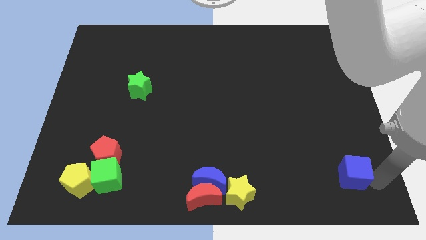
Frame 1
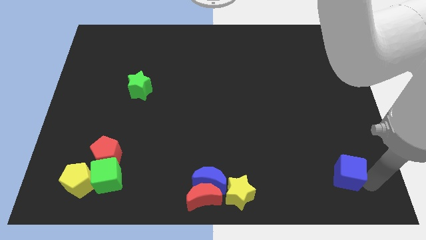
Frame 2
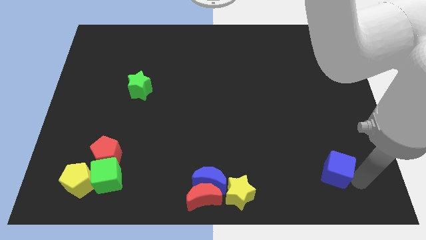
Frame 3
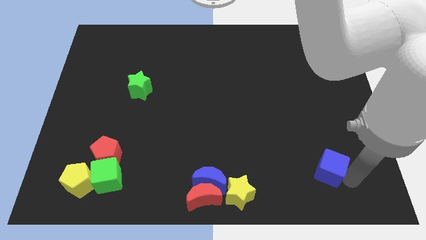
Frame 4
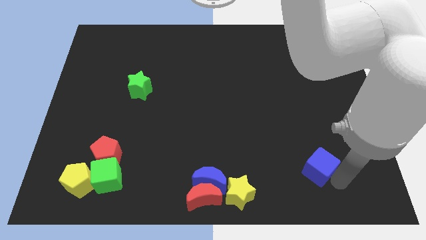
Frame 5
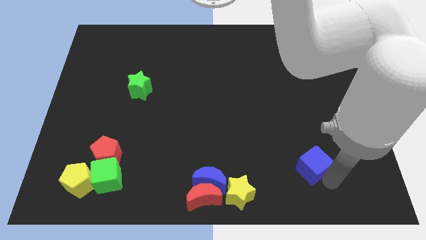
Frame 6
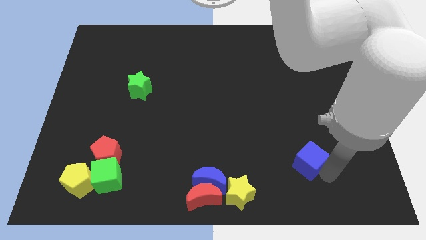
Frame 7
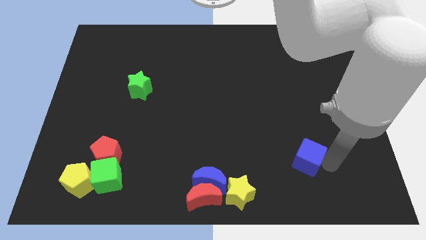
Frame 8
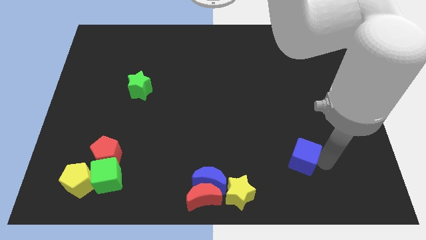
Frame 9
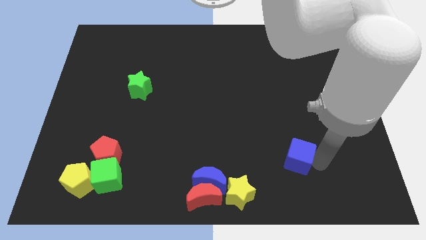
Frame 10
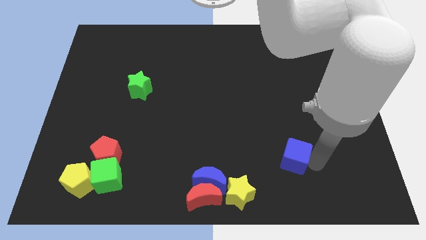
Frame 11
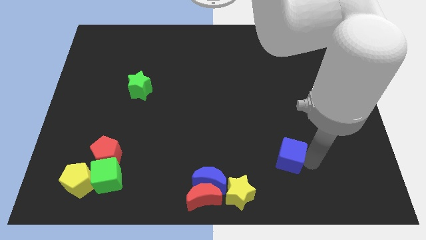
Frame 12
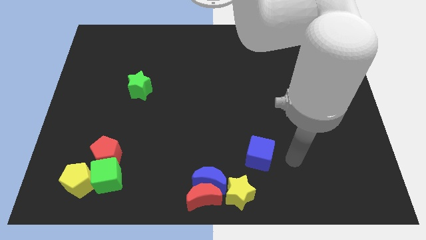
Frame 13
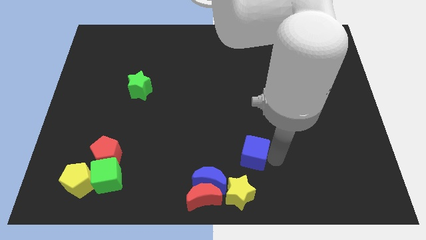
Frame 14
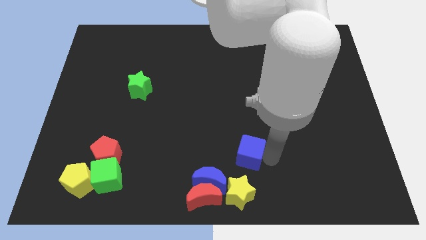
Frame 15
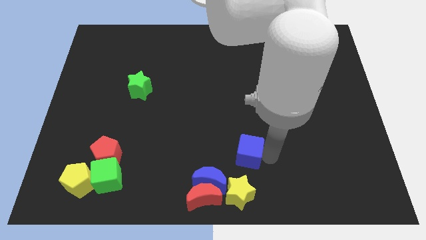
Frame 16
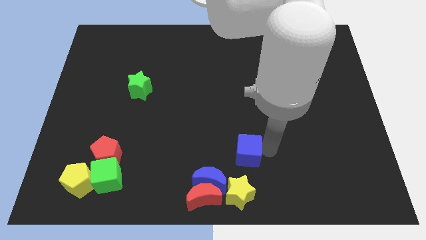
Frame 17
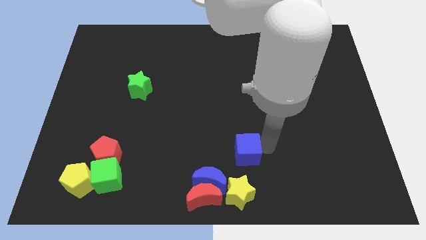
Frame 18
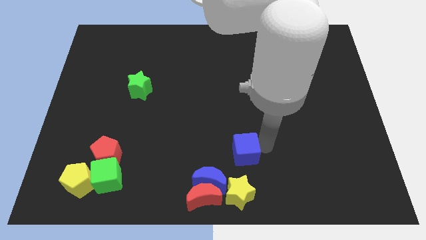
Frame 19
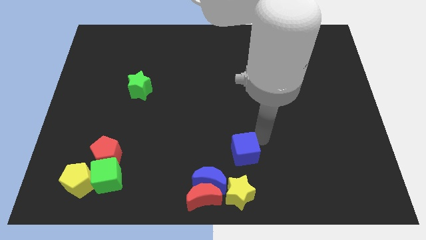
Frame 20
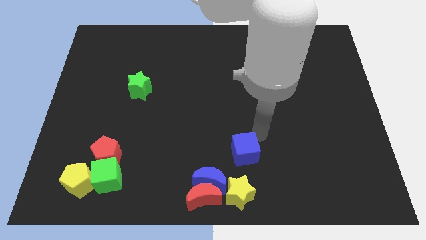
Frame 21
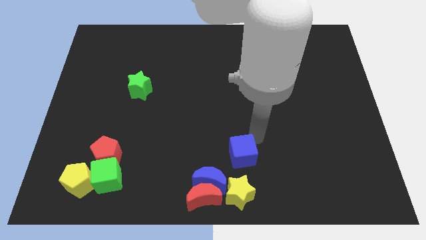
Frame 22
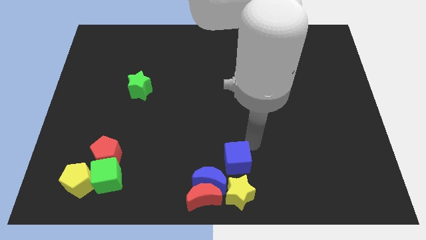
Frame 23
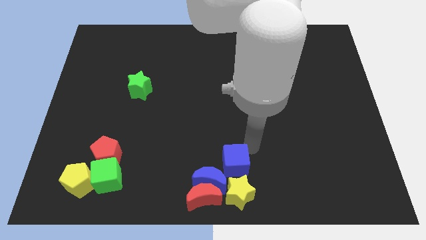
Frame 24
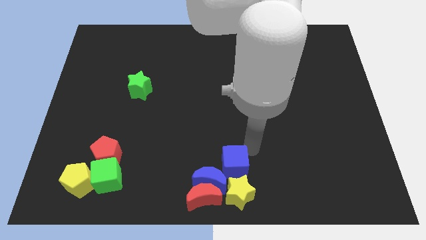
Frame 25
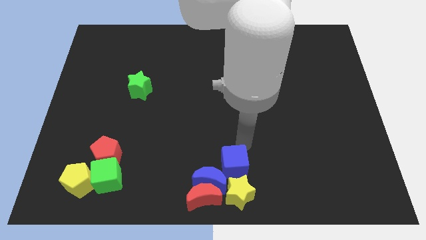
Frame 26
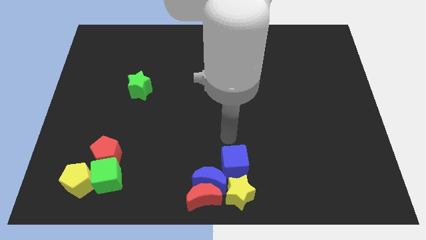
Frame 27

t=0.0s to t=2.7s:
place the blue cube above the yellow star

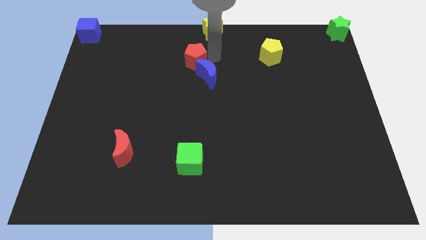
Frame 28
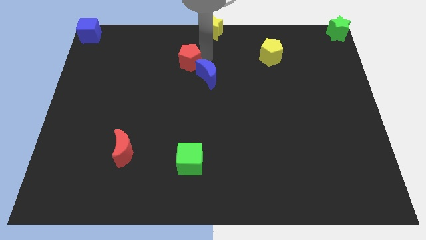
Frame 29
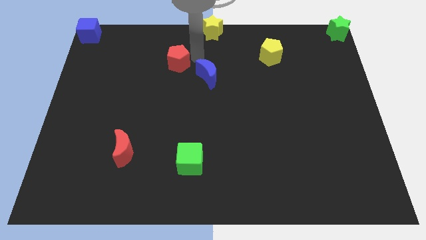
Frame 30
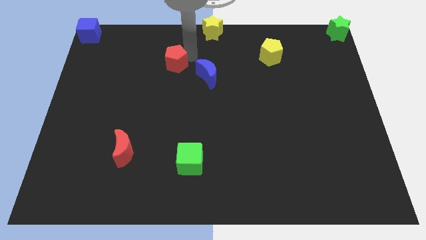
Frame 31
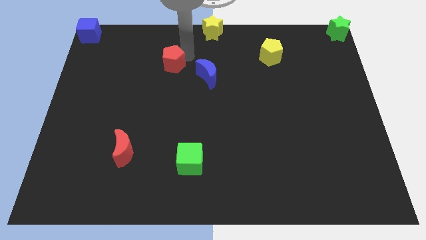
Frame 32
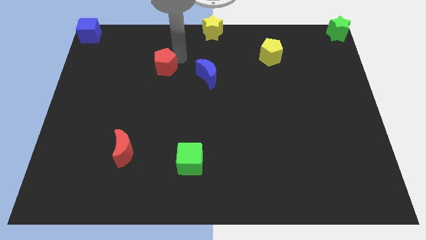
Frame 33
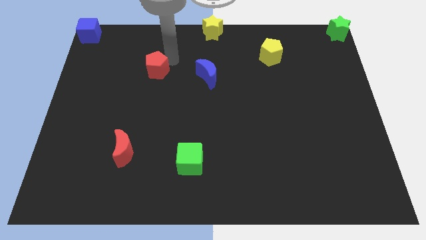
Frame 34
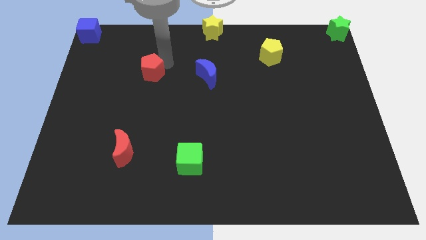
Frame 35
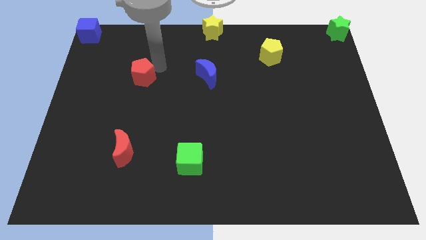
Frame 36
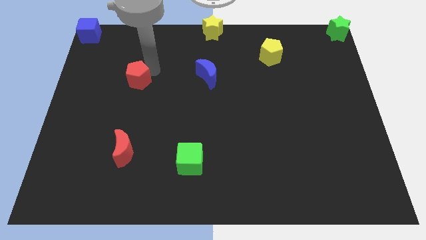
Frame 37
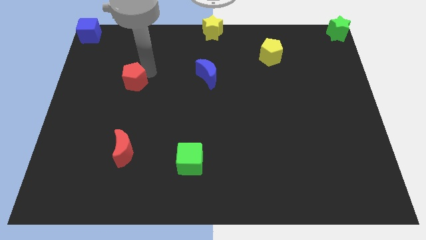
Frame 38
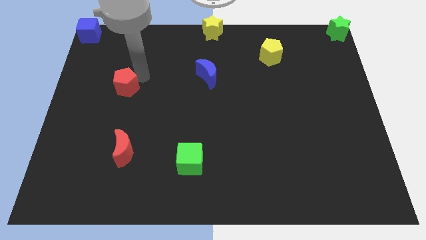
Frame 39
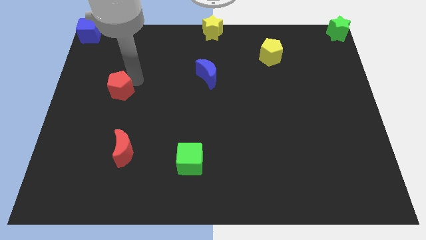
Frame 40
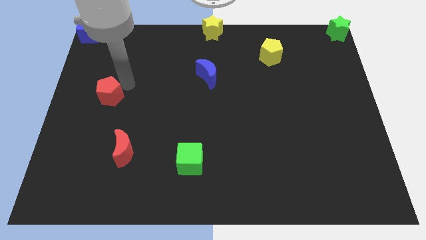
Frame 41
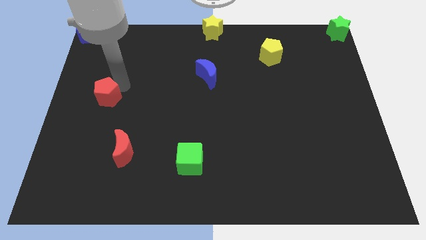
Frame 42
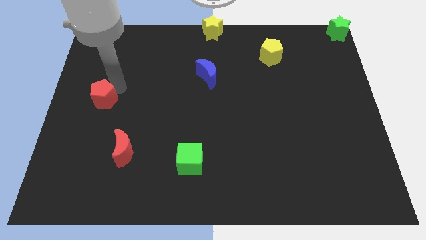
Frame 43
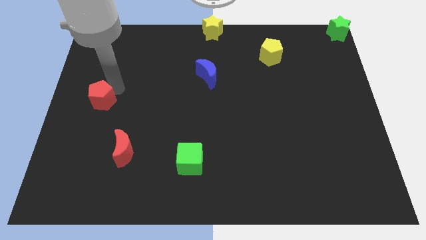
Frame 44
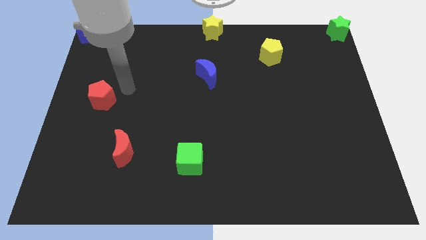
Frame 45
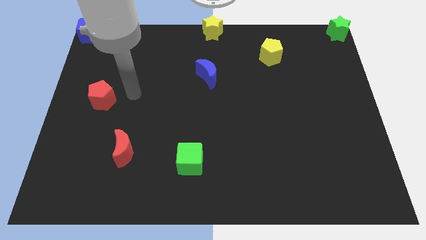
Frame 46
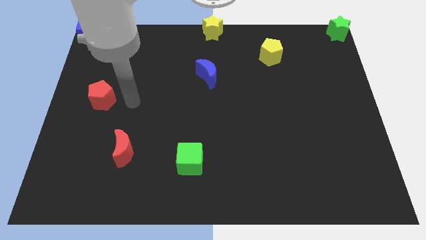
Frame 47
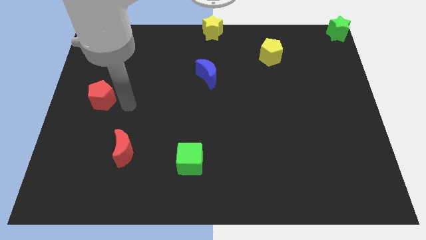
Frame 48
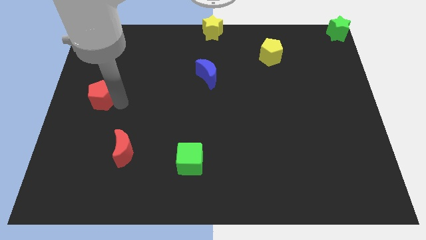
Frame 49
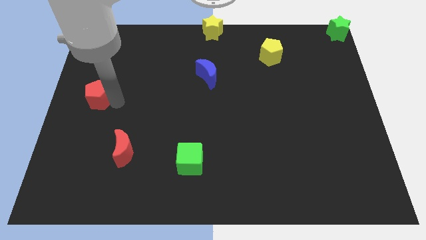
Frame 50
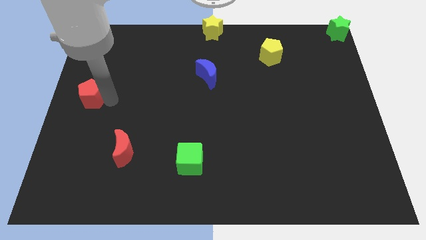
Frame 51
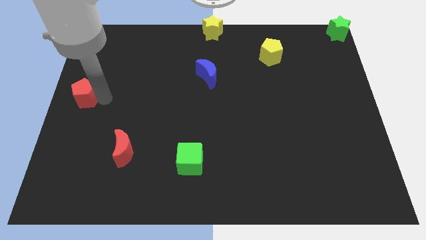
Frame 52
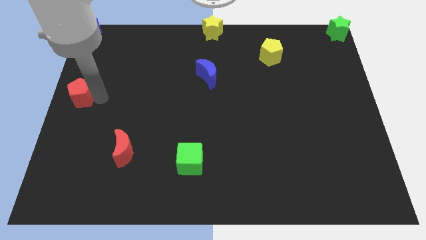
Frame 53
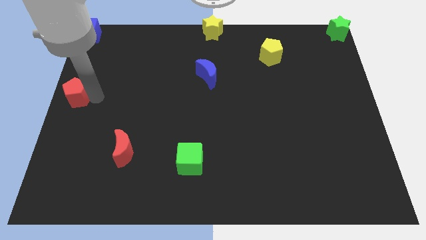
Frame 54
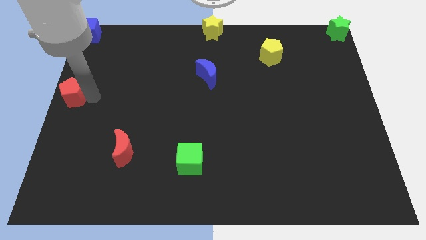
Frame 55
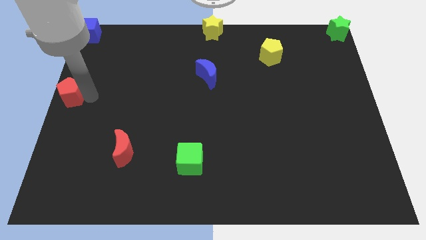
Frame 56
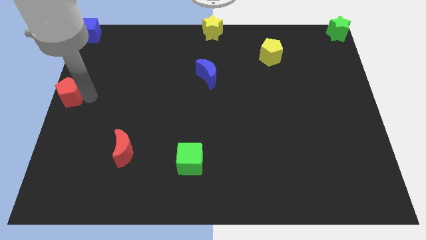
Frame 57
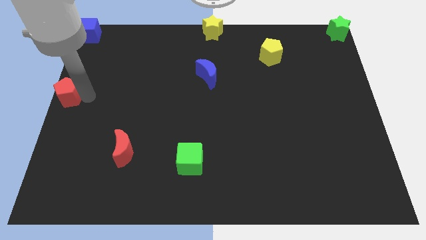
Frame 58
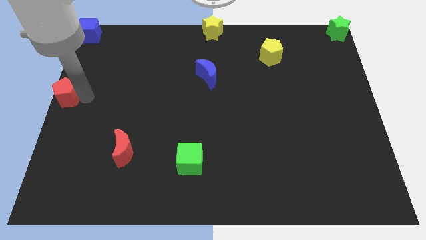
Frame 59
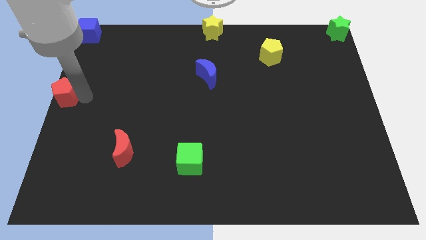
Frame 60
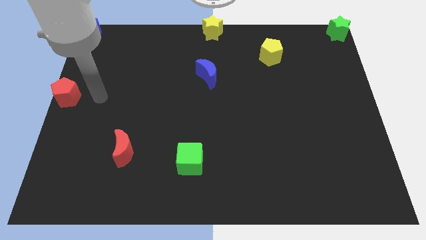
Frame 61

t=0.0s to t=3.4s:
push red pentagon away from blue crescent

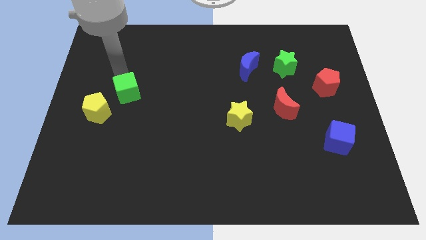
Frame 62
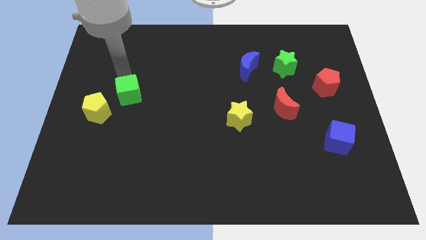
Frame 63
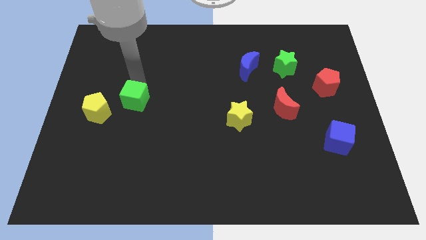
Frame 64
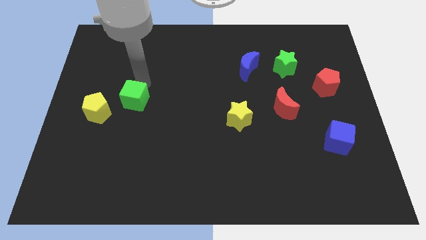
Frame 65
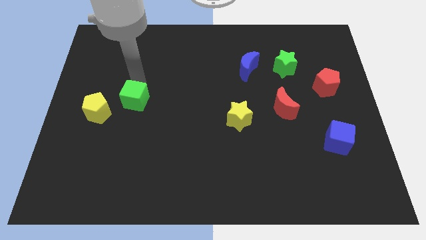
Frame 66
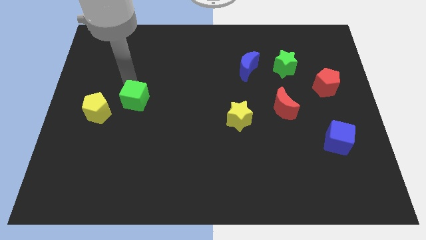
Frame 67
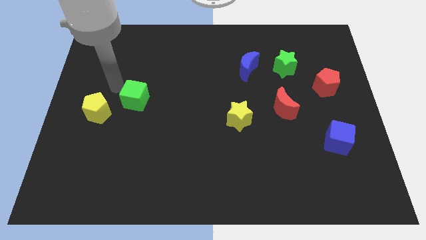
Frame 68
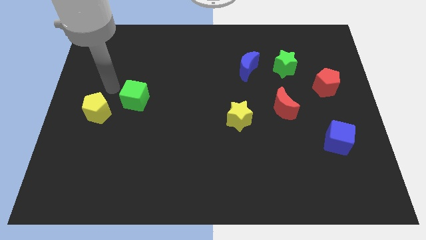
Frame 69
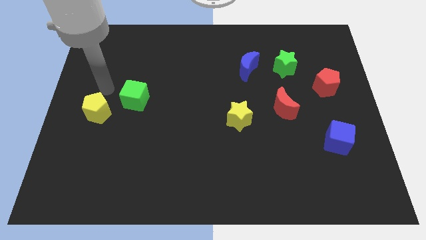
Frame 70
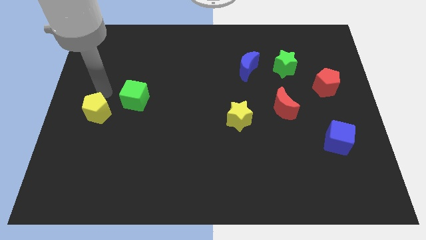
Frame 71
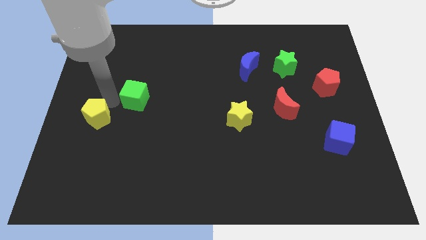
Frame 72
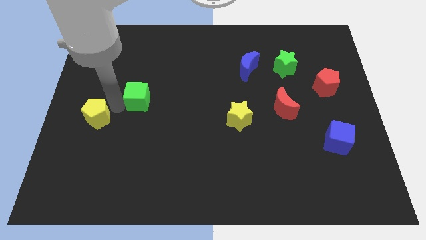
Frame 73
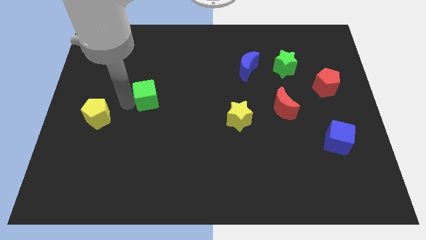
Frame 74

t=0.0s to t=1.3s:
place your arm in between yellow pentagon and green cube

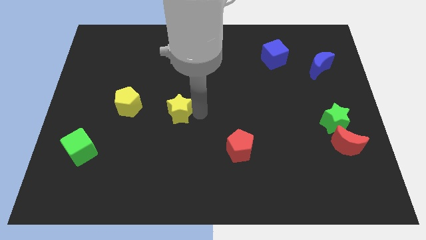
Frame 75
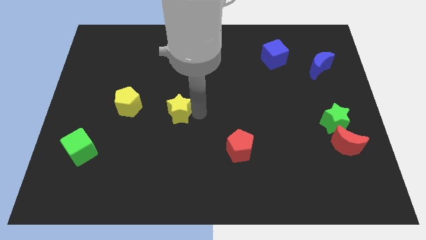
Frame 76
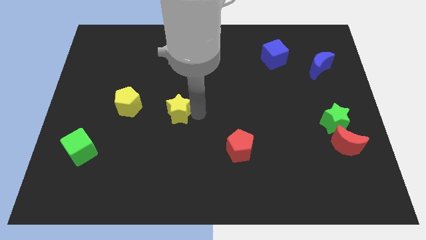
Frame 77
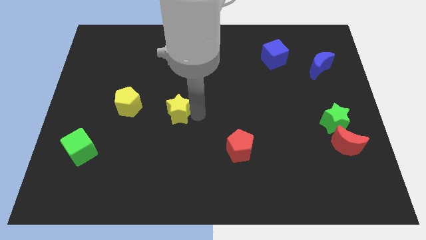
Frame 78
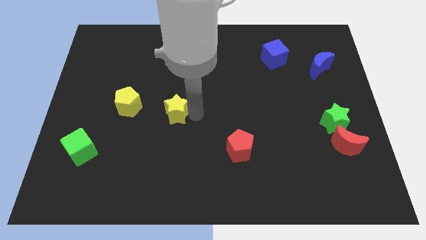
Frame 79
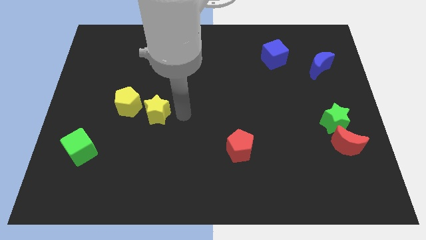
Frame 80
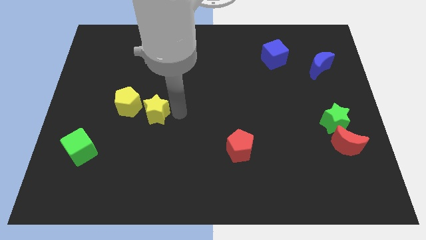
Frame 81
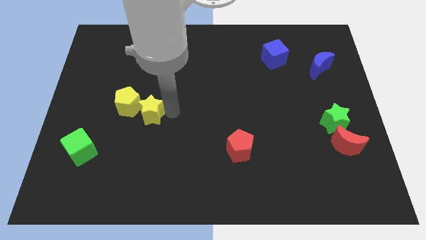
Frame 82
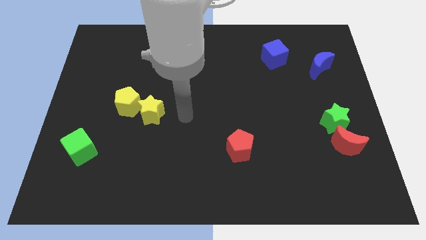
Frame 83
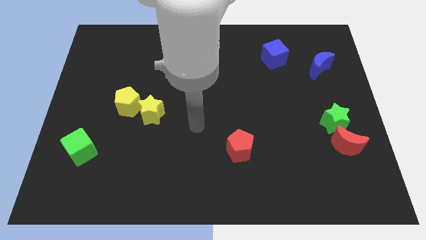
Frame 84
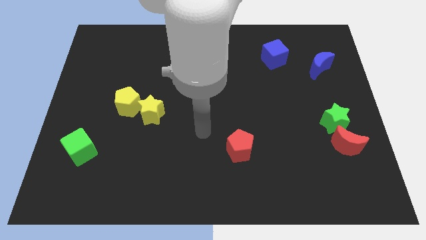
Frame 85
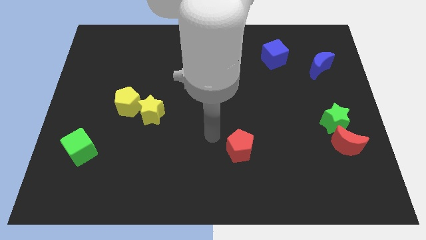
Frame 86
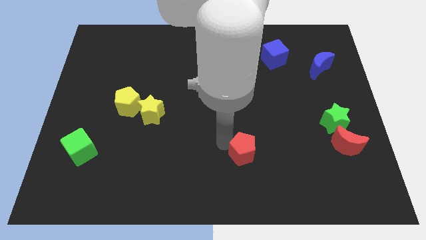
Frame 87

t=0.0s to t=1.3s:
place yellow star to the right side of the yellow pentagon

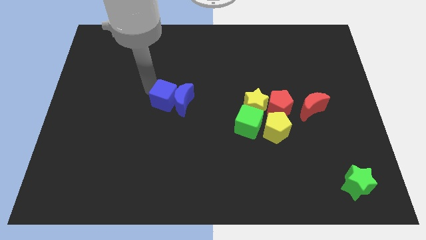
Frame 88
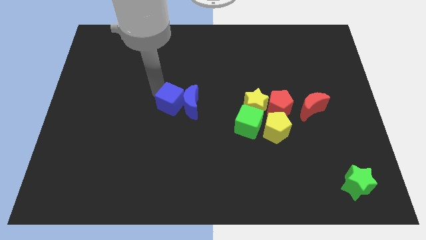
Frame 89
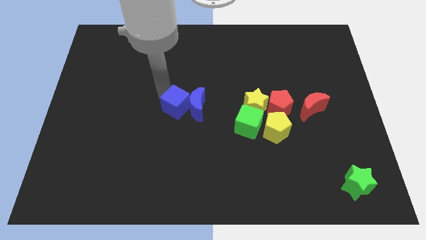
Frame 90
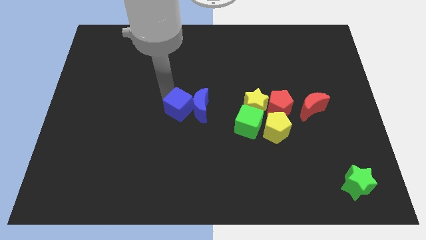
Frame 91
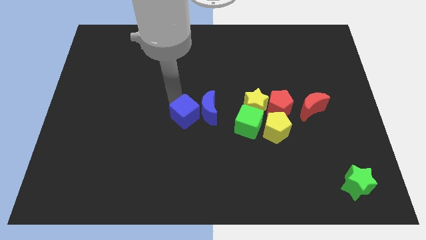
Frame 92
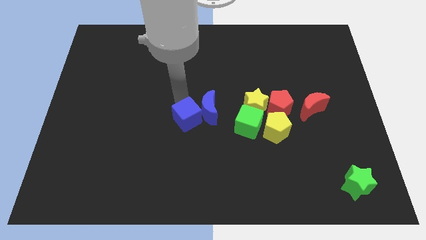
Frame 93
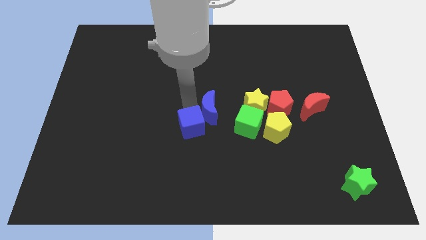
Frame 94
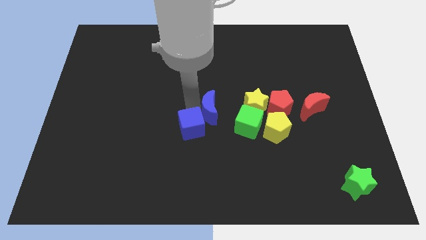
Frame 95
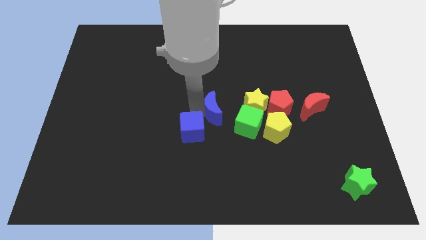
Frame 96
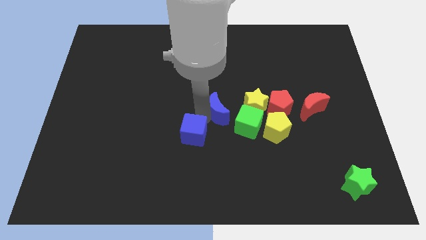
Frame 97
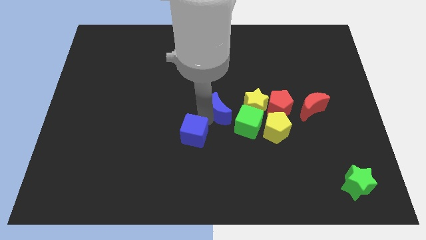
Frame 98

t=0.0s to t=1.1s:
separate the blue cube from the blue crescent
